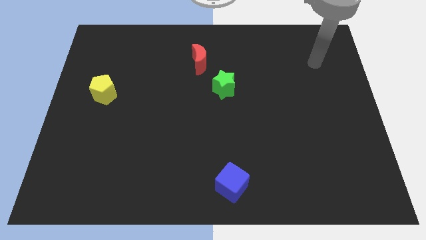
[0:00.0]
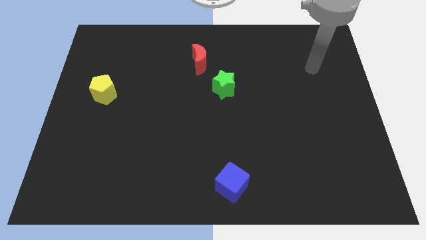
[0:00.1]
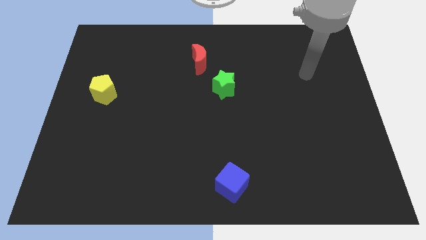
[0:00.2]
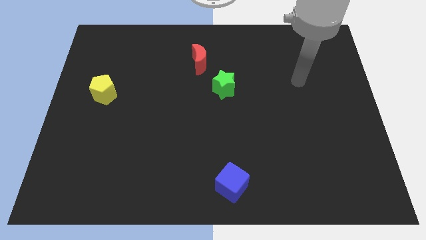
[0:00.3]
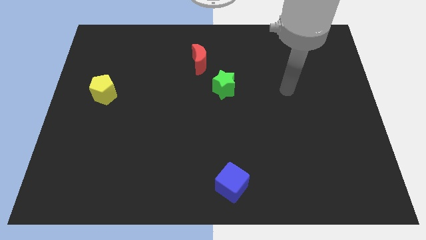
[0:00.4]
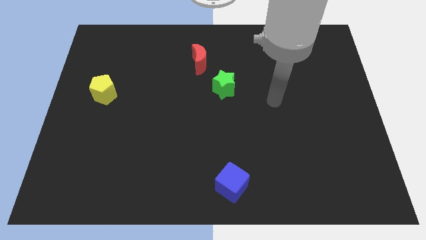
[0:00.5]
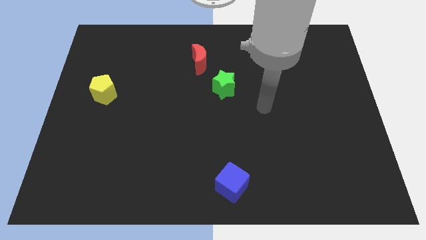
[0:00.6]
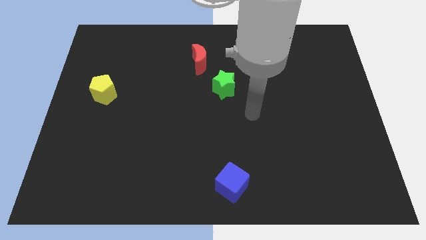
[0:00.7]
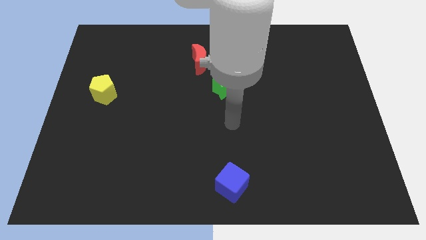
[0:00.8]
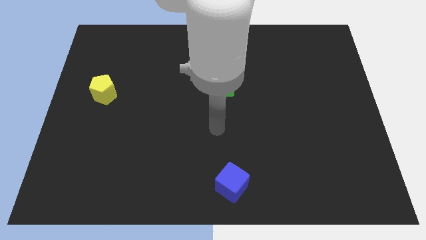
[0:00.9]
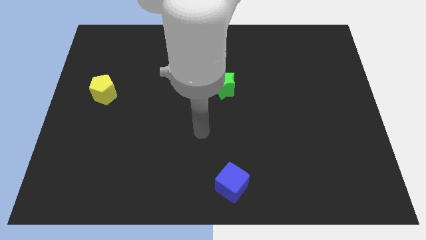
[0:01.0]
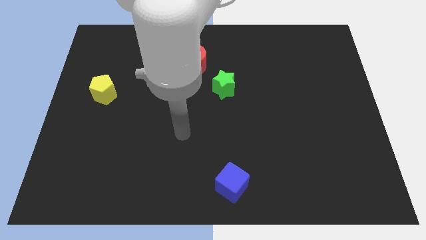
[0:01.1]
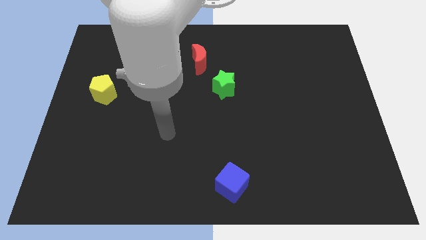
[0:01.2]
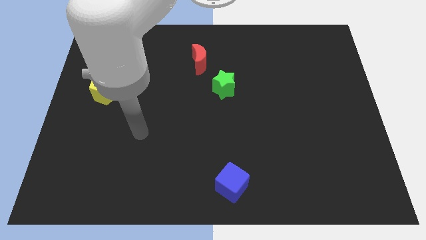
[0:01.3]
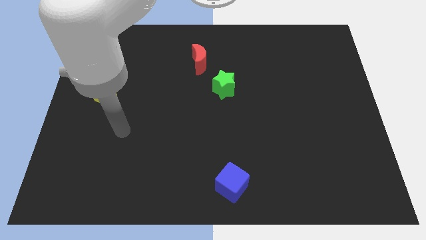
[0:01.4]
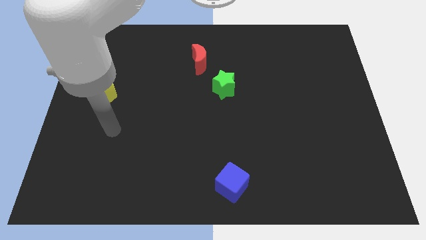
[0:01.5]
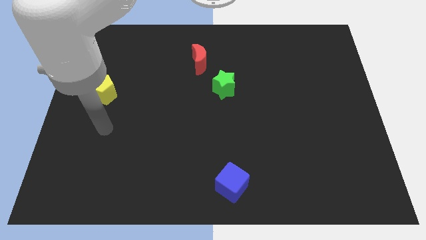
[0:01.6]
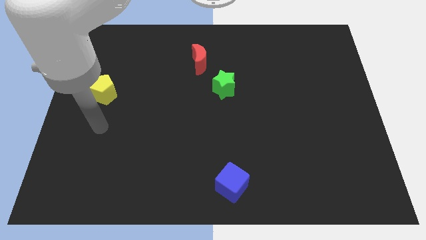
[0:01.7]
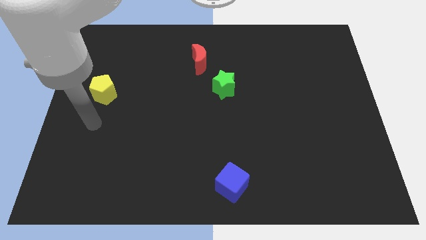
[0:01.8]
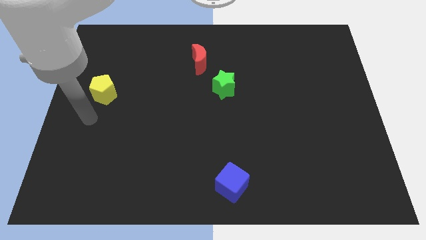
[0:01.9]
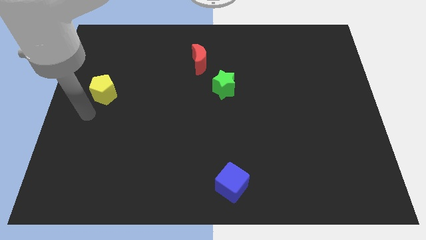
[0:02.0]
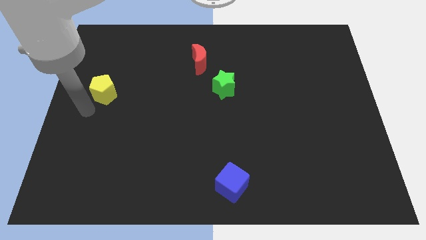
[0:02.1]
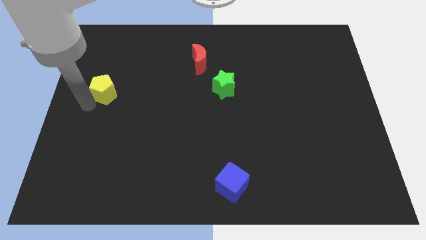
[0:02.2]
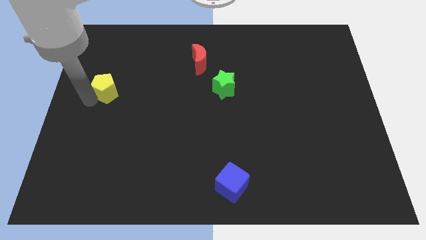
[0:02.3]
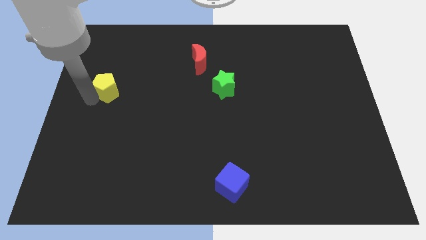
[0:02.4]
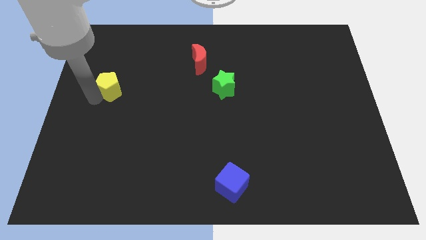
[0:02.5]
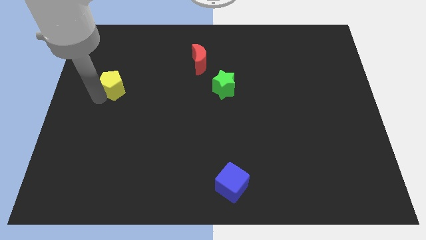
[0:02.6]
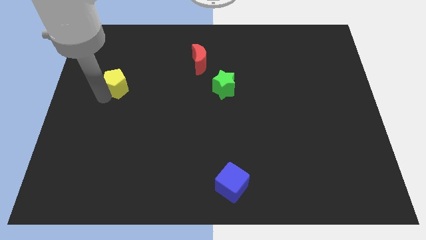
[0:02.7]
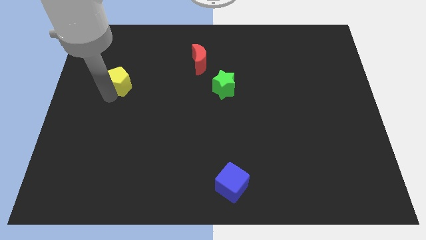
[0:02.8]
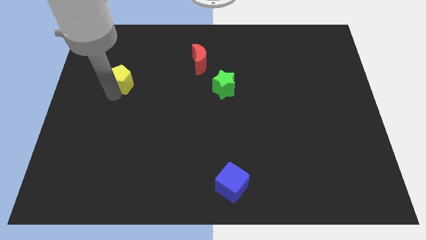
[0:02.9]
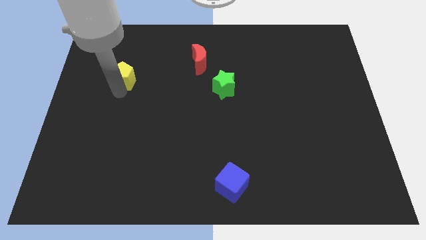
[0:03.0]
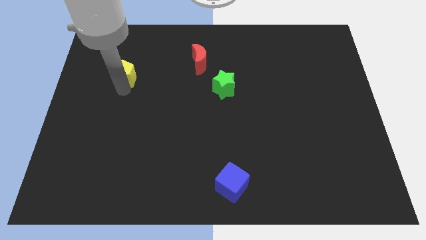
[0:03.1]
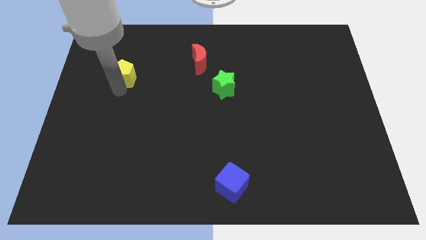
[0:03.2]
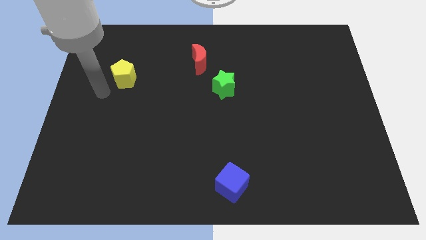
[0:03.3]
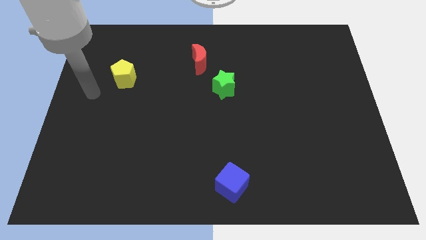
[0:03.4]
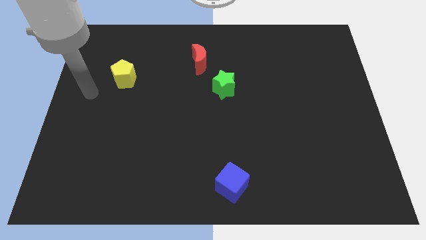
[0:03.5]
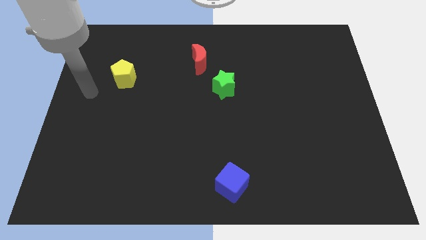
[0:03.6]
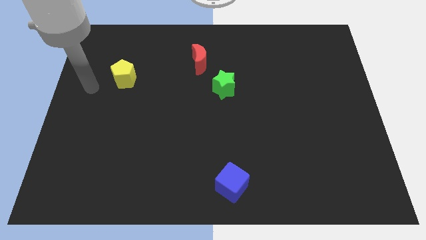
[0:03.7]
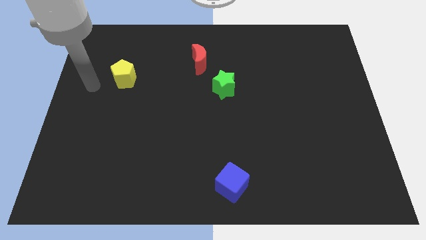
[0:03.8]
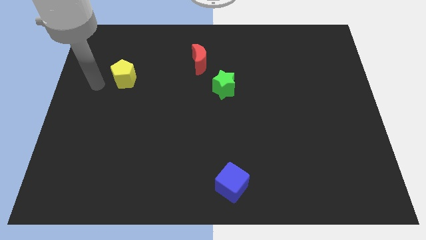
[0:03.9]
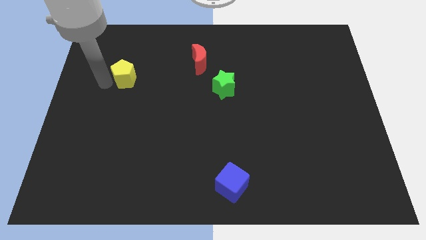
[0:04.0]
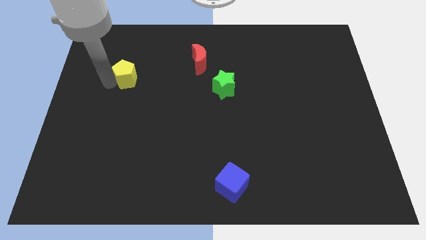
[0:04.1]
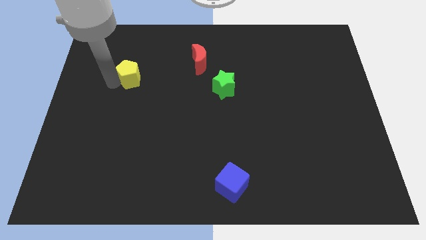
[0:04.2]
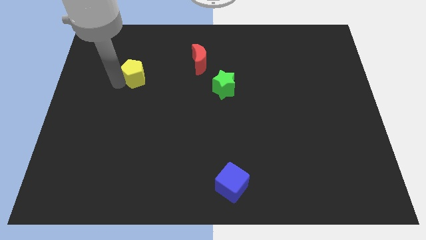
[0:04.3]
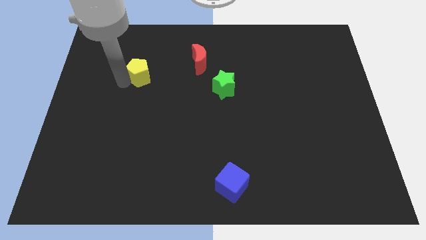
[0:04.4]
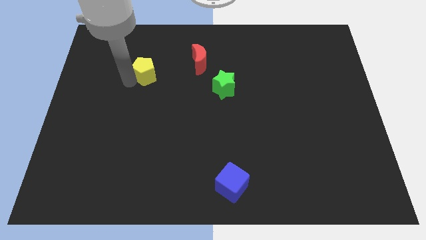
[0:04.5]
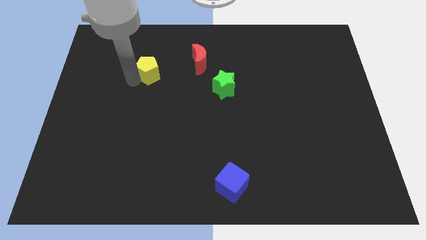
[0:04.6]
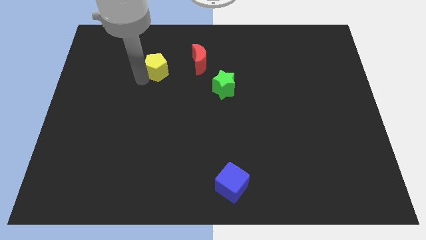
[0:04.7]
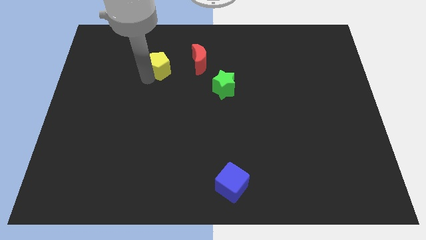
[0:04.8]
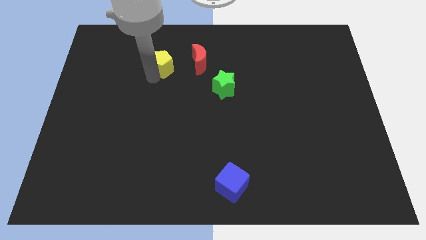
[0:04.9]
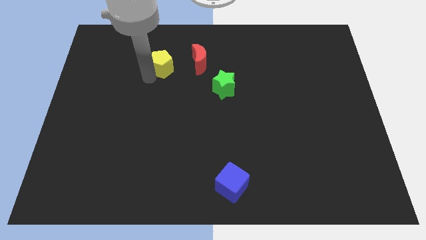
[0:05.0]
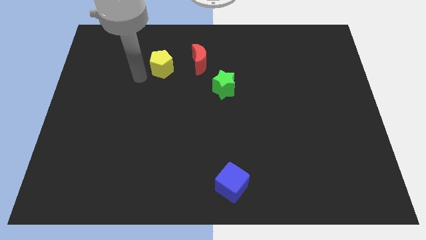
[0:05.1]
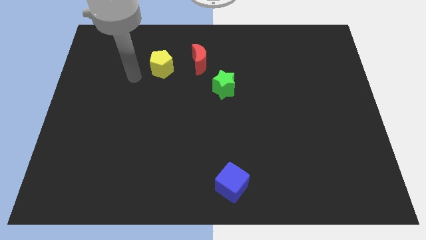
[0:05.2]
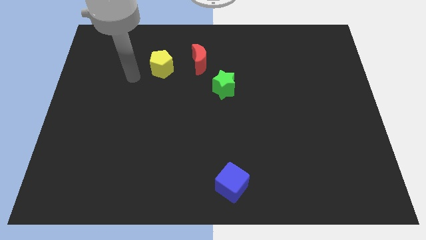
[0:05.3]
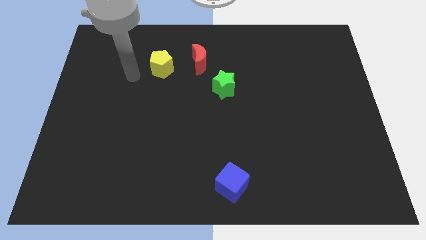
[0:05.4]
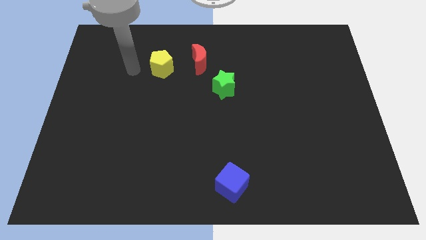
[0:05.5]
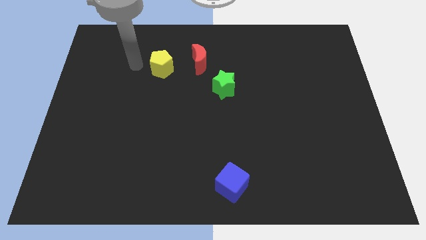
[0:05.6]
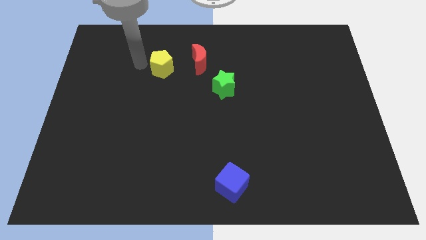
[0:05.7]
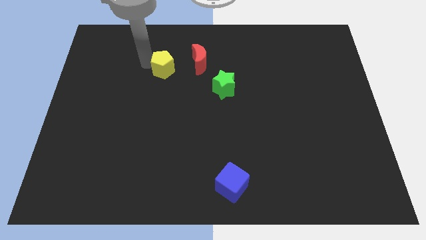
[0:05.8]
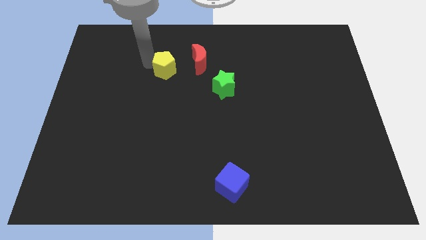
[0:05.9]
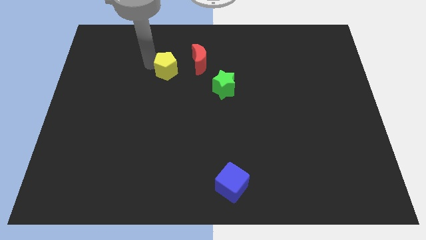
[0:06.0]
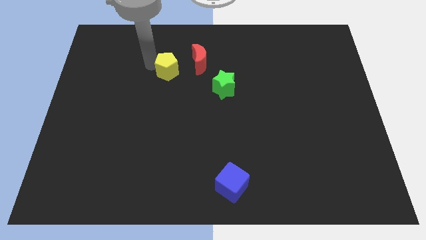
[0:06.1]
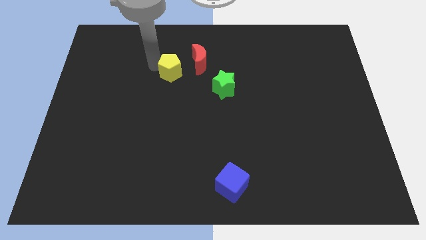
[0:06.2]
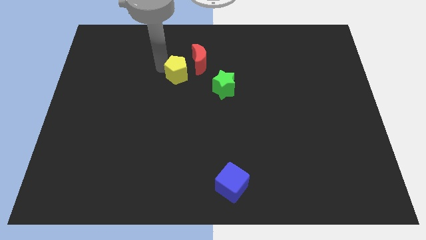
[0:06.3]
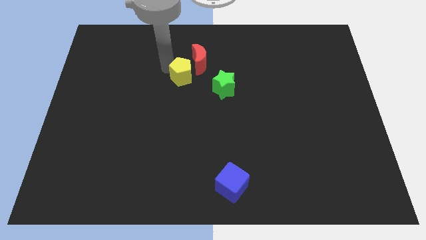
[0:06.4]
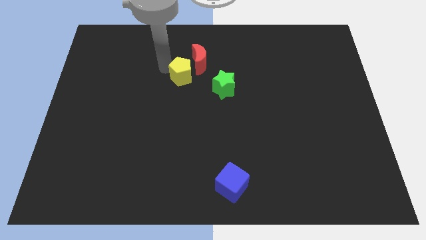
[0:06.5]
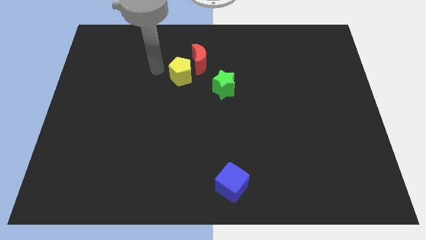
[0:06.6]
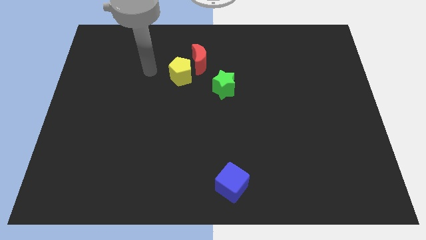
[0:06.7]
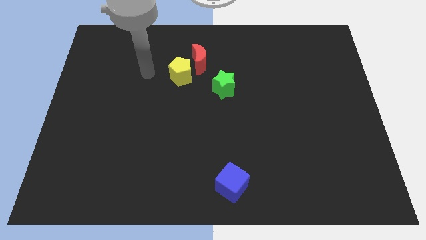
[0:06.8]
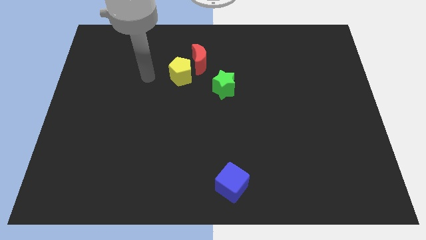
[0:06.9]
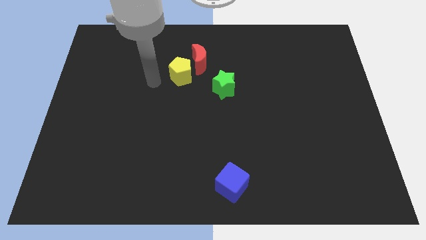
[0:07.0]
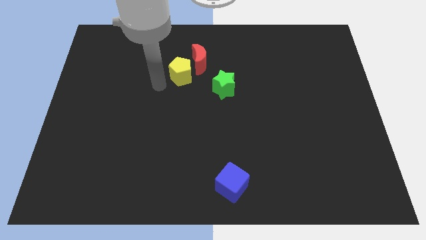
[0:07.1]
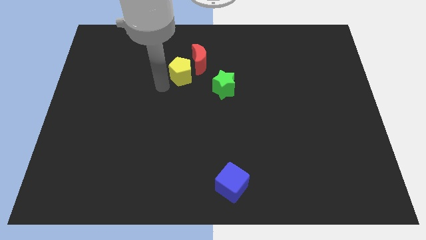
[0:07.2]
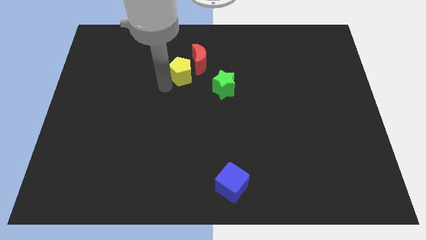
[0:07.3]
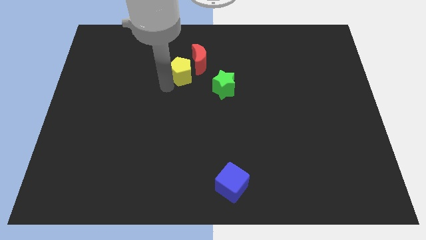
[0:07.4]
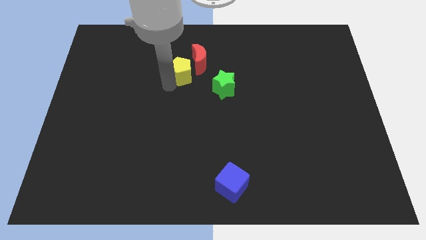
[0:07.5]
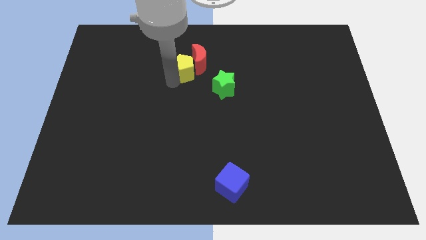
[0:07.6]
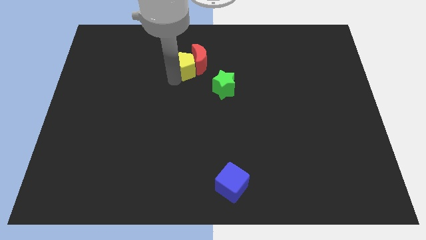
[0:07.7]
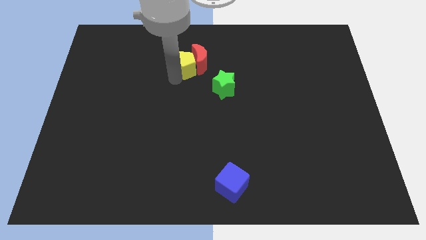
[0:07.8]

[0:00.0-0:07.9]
push the yellow block next to the red moon

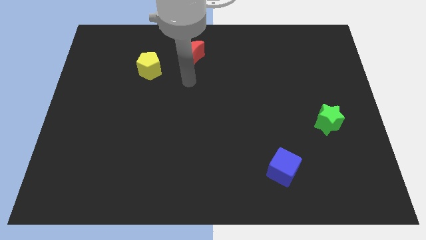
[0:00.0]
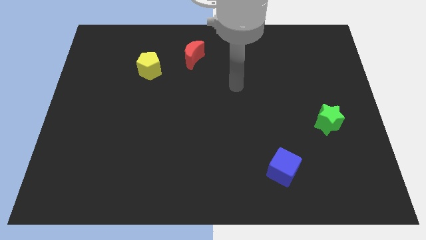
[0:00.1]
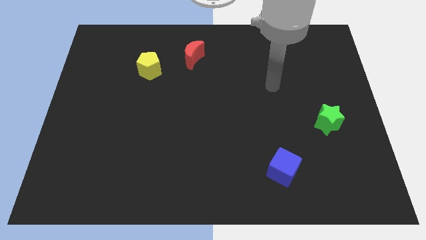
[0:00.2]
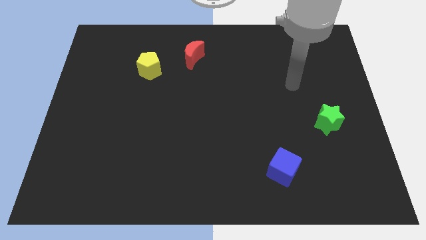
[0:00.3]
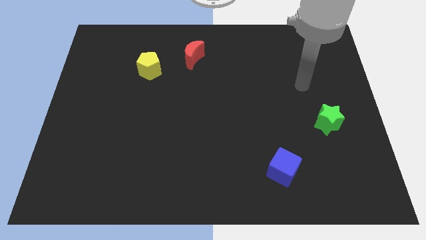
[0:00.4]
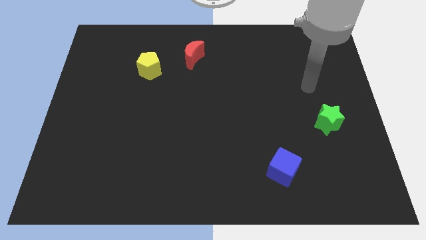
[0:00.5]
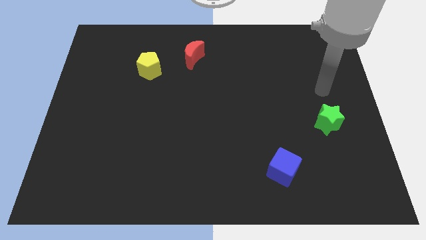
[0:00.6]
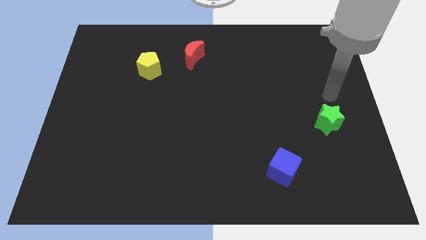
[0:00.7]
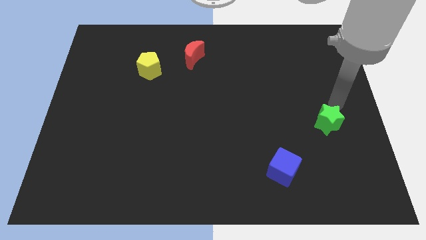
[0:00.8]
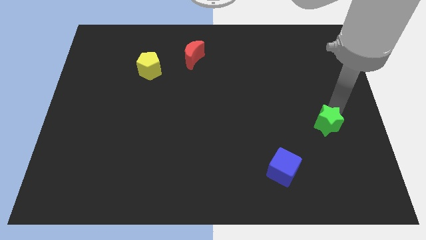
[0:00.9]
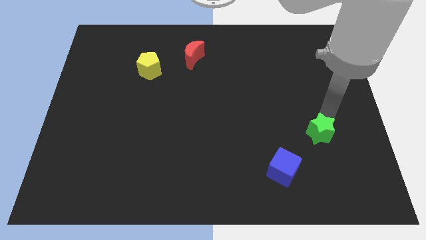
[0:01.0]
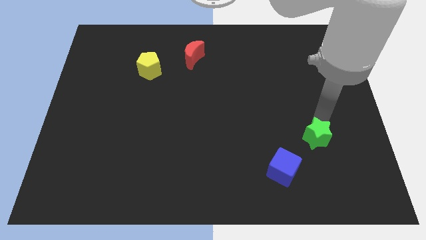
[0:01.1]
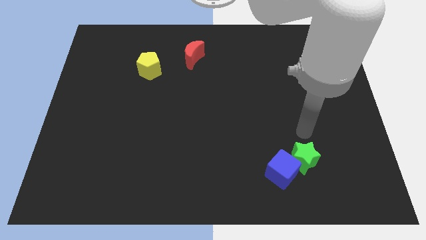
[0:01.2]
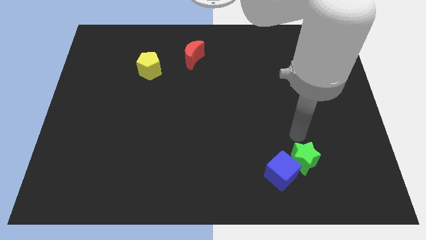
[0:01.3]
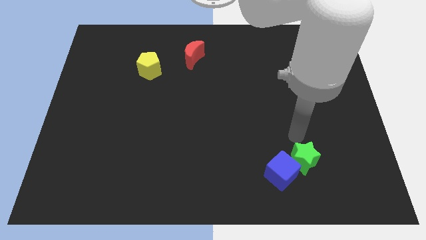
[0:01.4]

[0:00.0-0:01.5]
push the star to the blue cube
